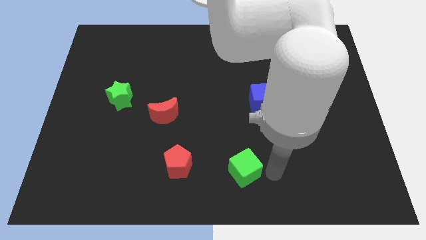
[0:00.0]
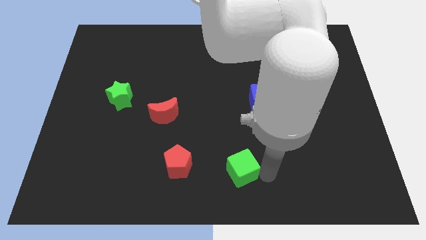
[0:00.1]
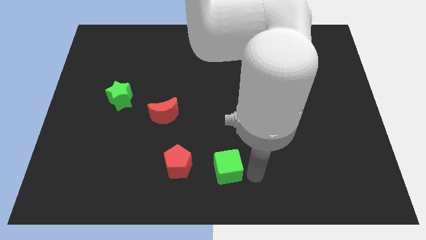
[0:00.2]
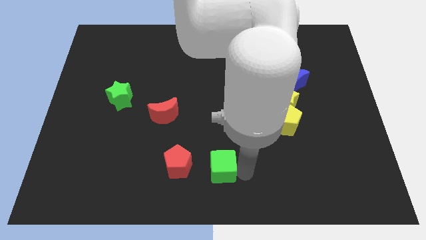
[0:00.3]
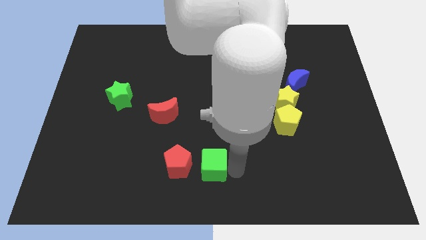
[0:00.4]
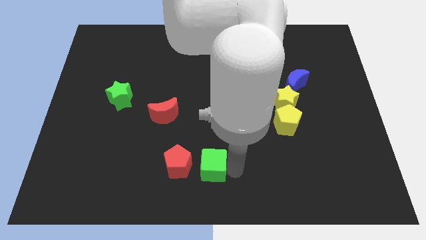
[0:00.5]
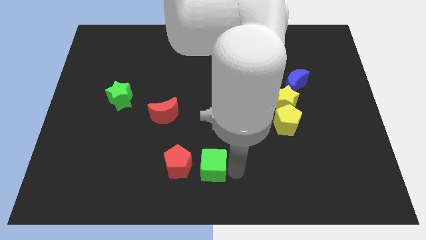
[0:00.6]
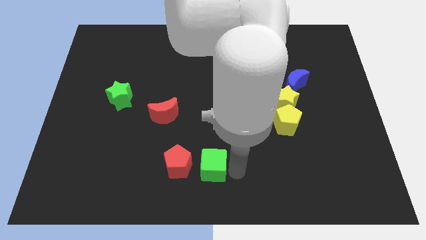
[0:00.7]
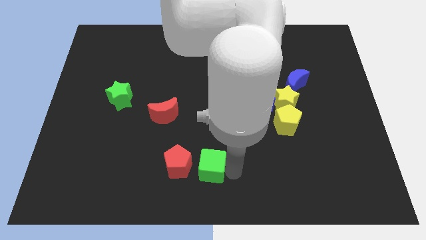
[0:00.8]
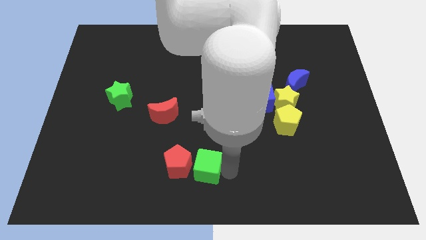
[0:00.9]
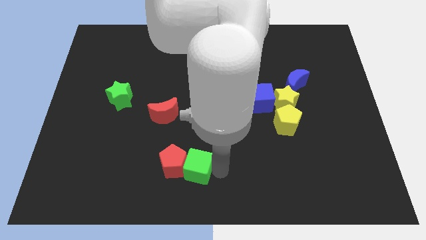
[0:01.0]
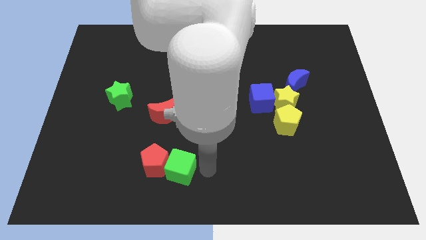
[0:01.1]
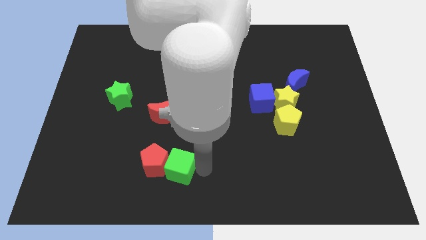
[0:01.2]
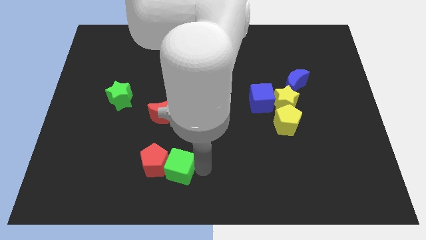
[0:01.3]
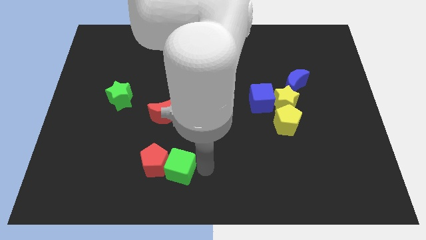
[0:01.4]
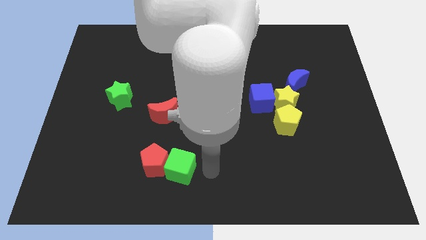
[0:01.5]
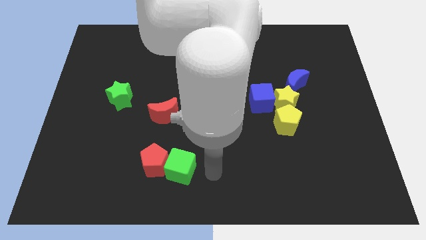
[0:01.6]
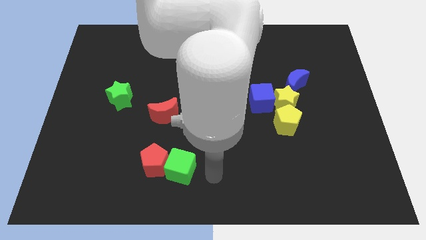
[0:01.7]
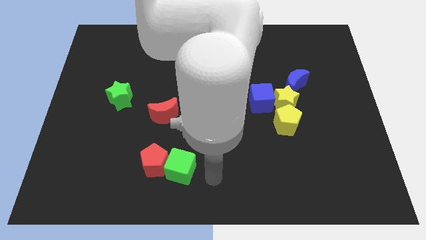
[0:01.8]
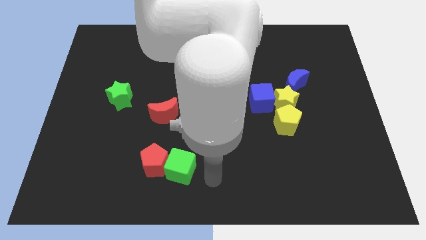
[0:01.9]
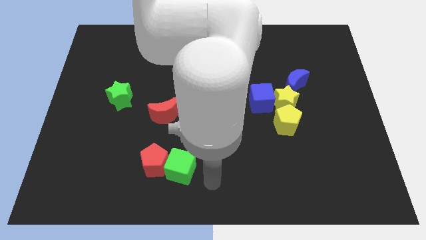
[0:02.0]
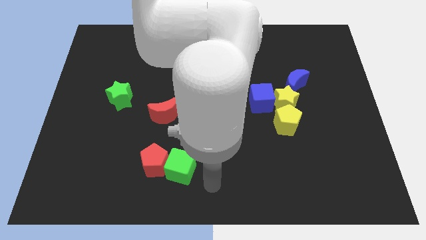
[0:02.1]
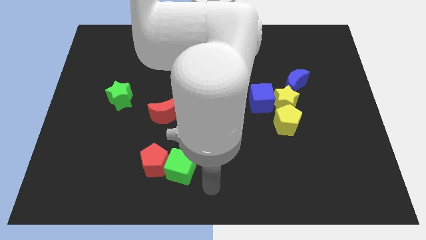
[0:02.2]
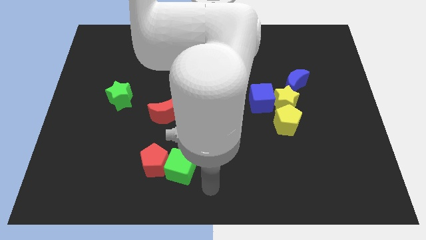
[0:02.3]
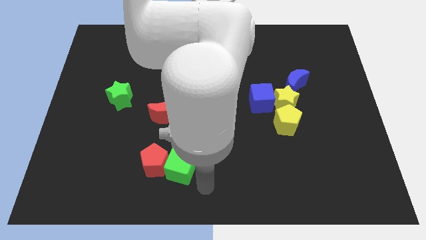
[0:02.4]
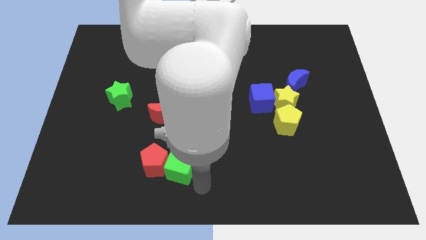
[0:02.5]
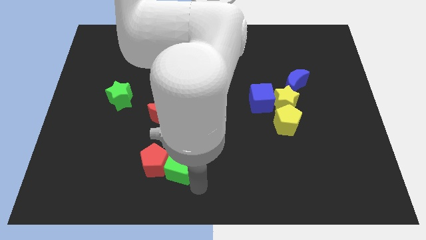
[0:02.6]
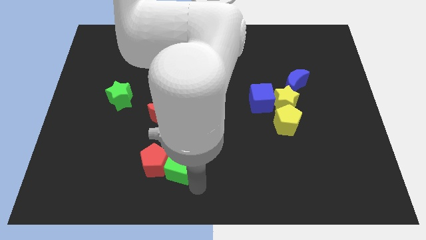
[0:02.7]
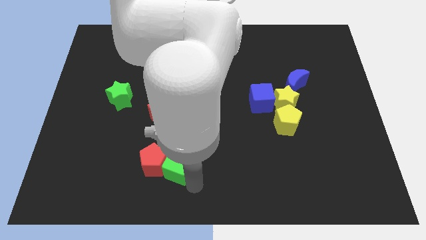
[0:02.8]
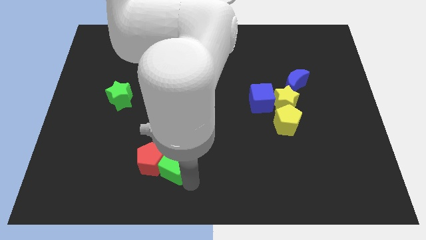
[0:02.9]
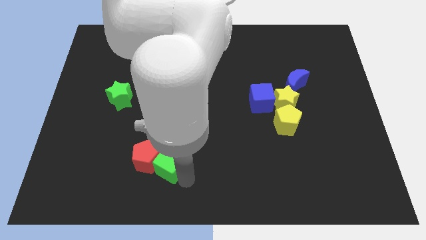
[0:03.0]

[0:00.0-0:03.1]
move the green cube along with the red pentagon to the bottom of the red crescent

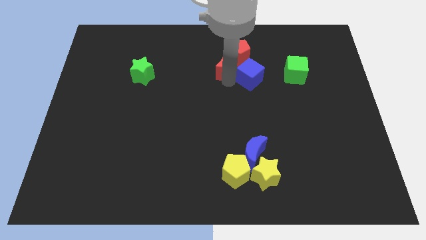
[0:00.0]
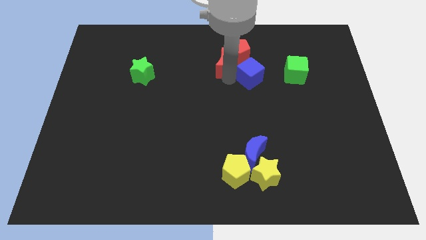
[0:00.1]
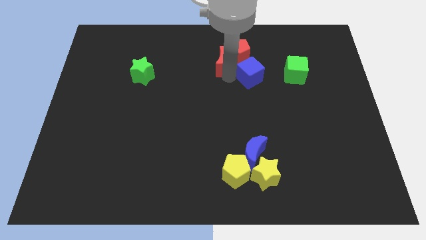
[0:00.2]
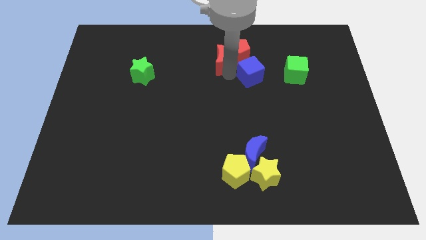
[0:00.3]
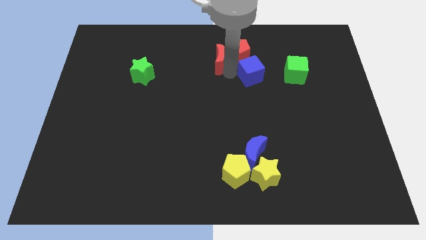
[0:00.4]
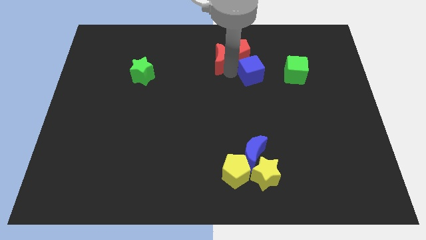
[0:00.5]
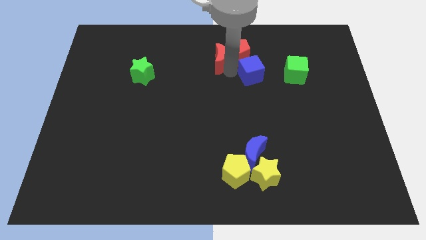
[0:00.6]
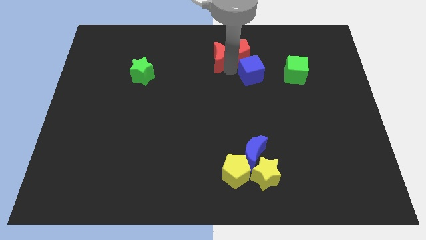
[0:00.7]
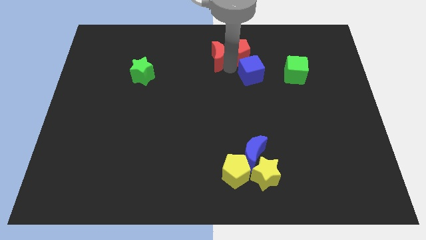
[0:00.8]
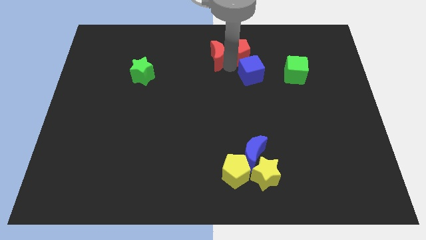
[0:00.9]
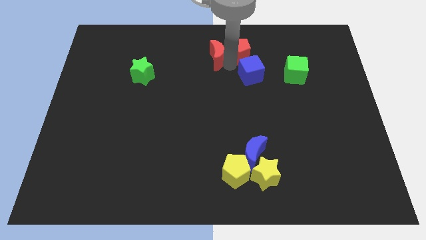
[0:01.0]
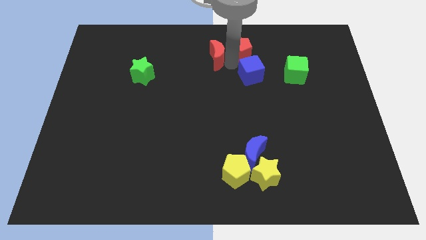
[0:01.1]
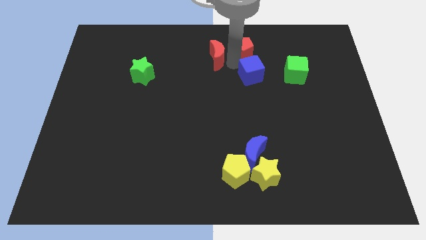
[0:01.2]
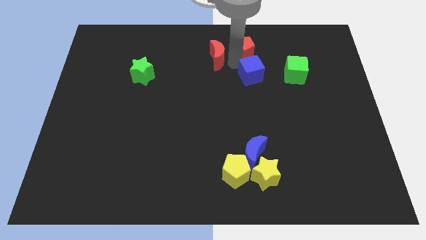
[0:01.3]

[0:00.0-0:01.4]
separate the red crescent and blue cube

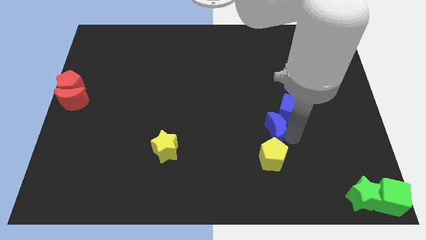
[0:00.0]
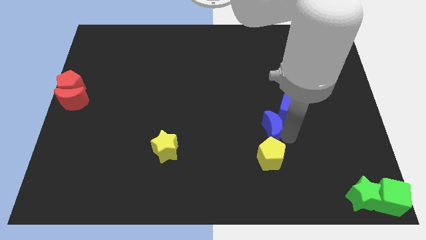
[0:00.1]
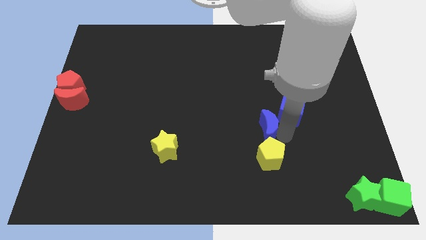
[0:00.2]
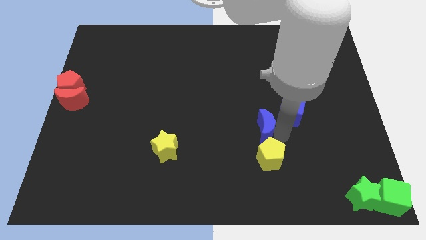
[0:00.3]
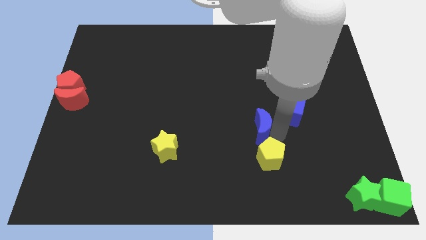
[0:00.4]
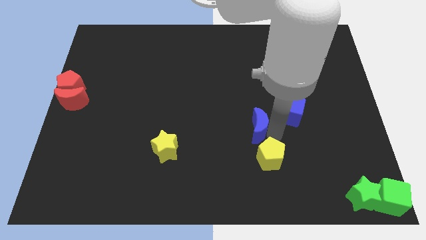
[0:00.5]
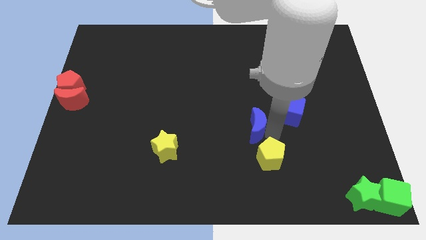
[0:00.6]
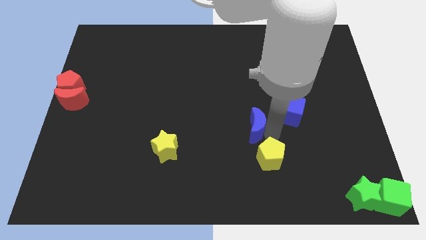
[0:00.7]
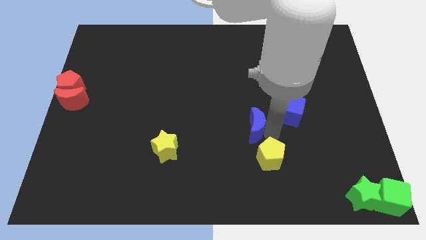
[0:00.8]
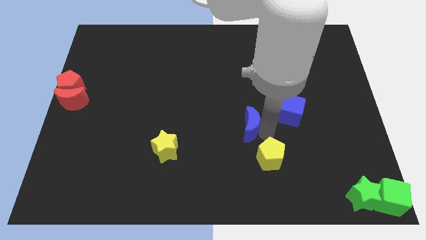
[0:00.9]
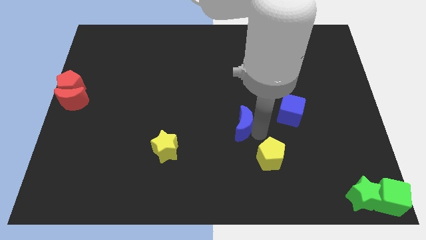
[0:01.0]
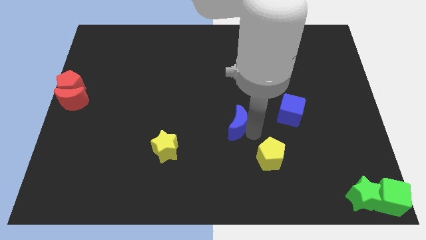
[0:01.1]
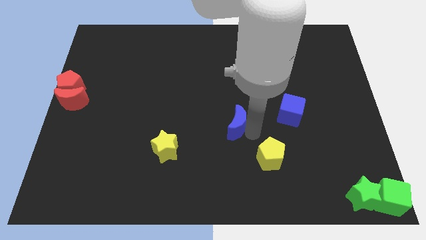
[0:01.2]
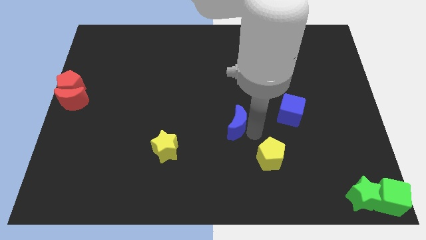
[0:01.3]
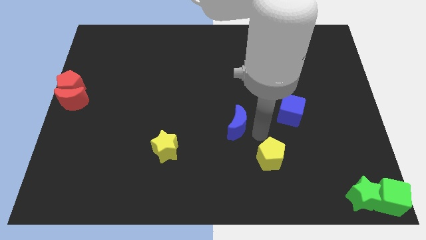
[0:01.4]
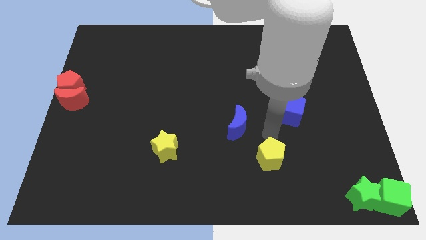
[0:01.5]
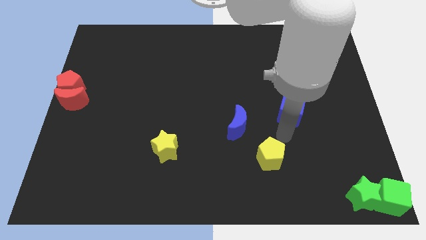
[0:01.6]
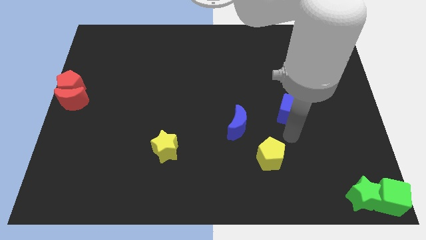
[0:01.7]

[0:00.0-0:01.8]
separate the blue crescent from the yellow pentagon

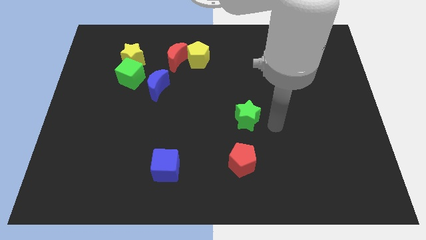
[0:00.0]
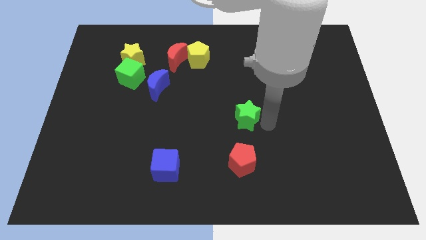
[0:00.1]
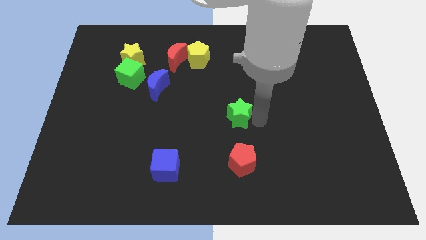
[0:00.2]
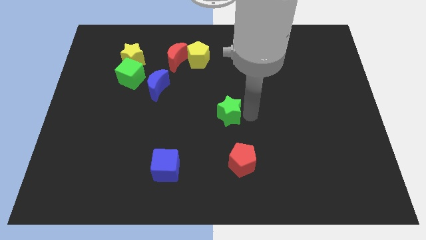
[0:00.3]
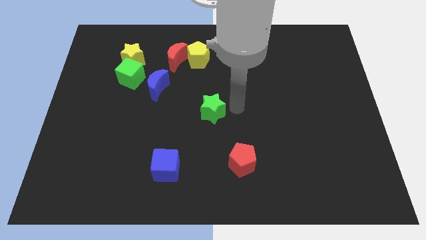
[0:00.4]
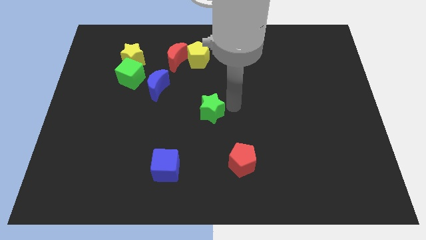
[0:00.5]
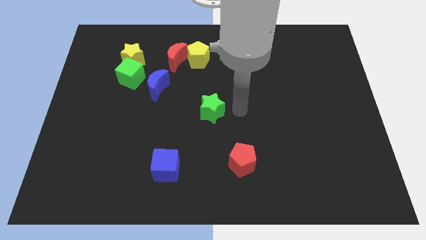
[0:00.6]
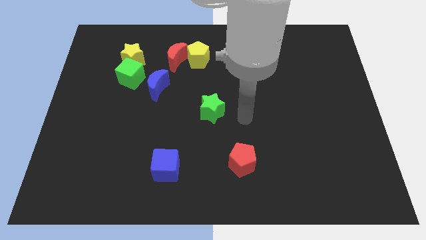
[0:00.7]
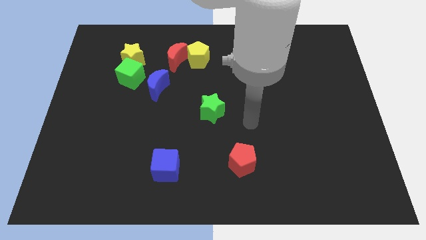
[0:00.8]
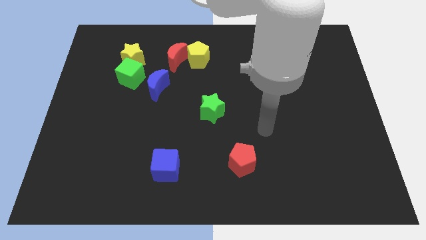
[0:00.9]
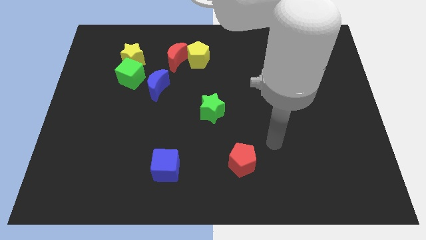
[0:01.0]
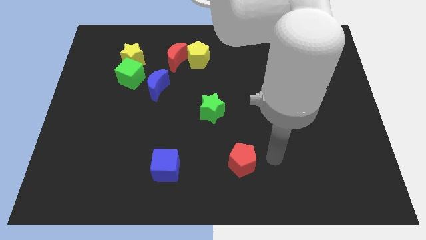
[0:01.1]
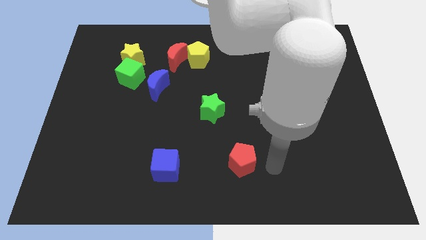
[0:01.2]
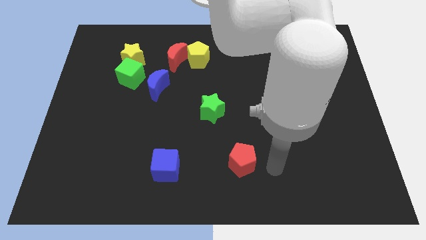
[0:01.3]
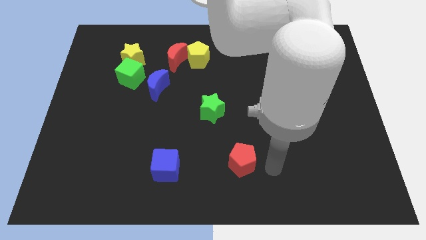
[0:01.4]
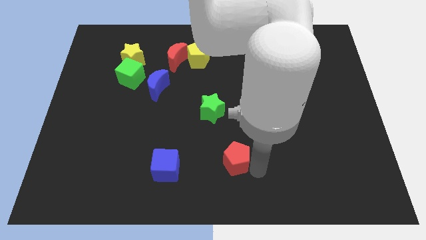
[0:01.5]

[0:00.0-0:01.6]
move the green star slightly left

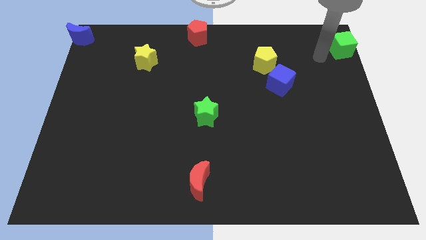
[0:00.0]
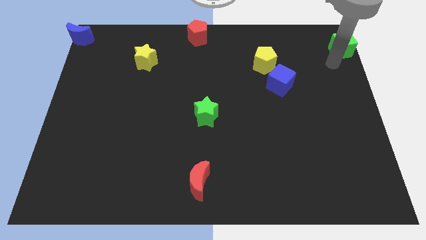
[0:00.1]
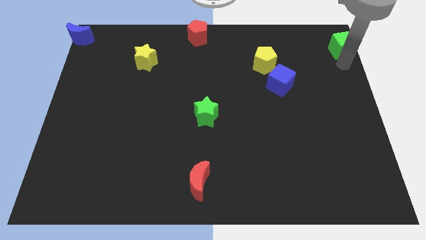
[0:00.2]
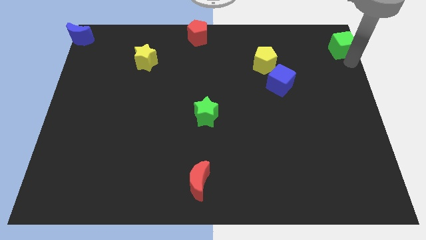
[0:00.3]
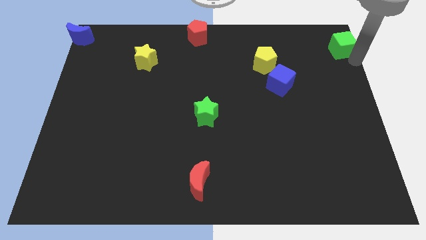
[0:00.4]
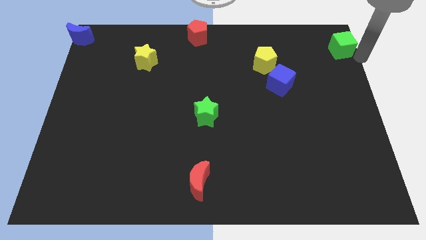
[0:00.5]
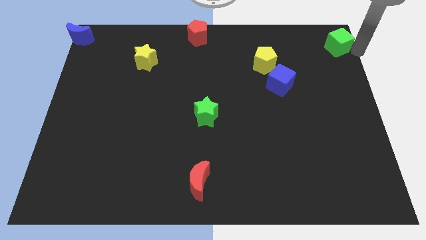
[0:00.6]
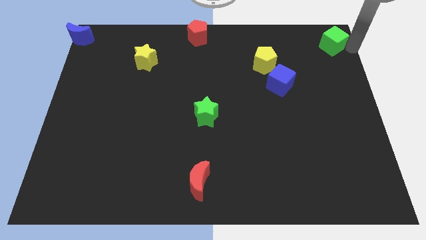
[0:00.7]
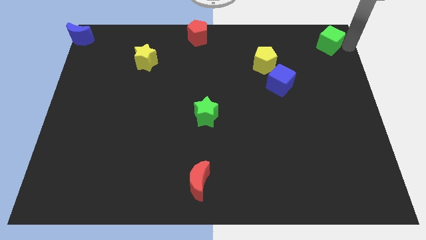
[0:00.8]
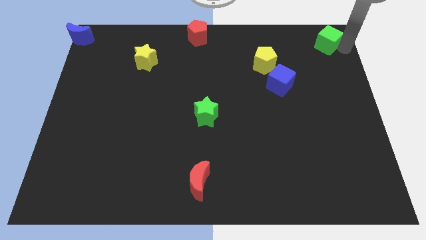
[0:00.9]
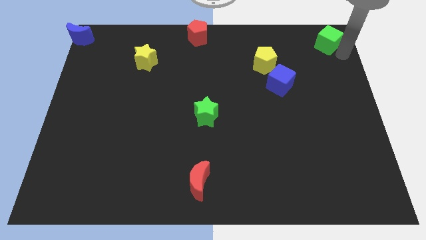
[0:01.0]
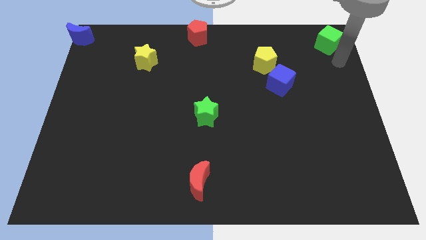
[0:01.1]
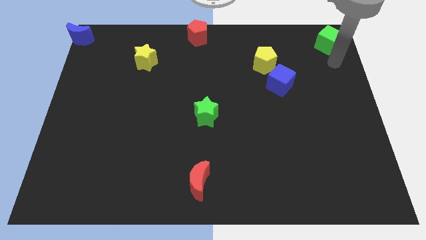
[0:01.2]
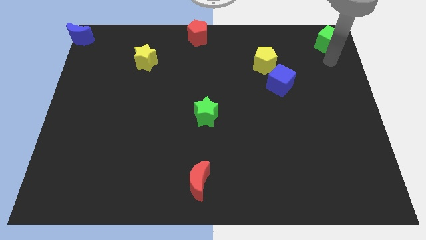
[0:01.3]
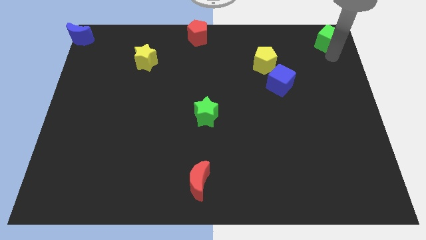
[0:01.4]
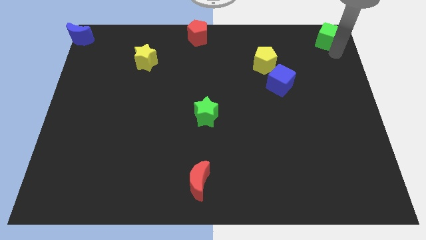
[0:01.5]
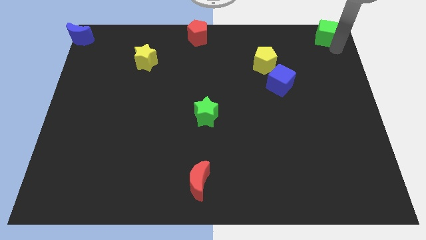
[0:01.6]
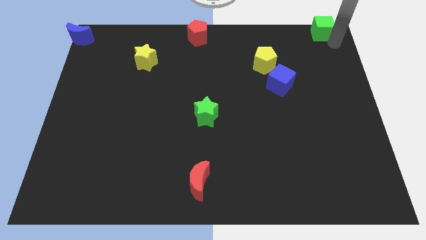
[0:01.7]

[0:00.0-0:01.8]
move the green cube to the top right
